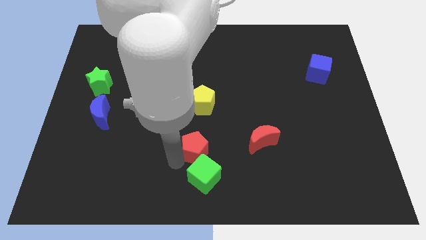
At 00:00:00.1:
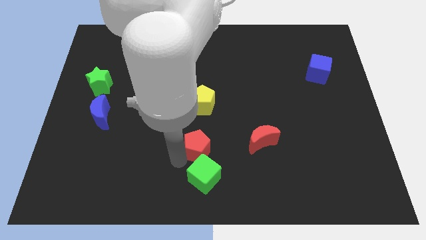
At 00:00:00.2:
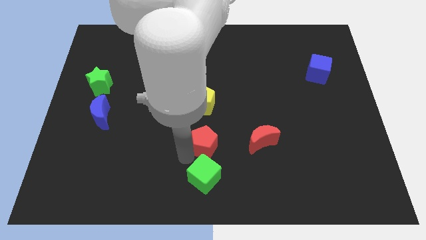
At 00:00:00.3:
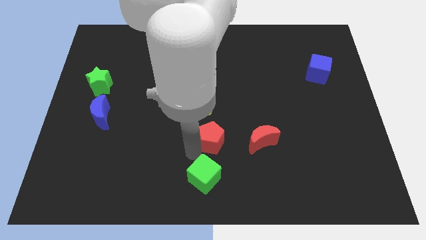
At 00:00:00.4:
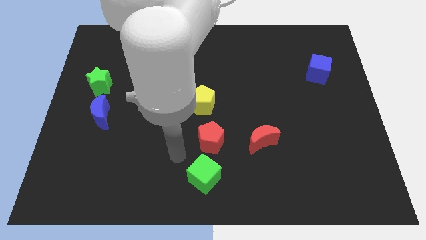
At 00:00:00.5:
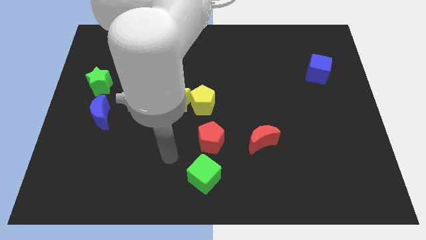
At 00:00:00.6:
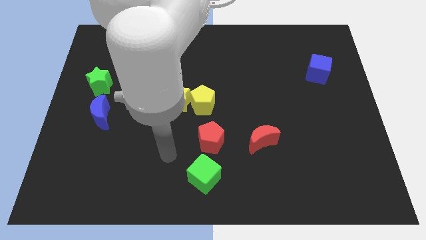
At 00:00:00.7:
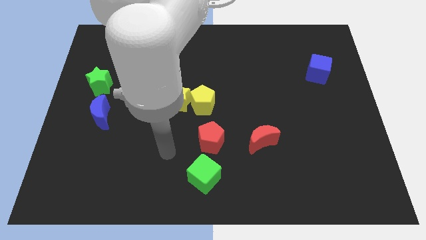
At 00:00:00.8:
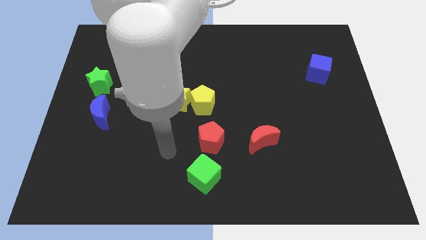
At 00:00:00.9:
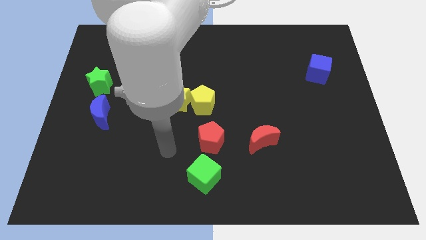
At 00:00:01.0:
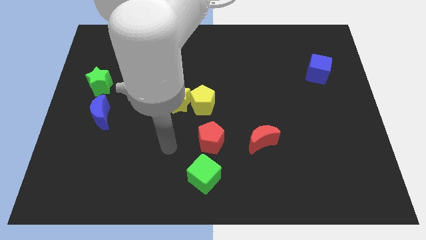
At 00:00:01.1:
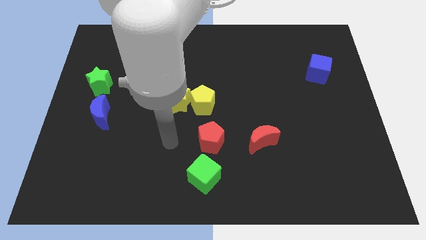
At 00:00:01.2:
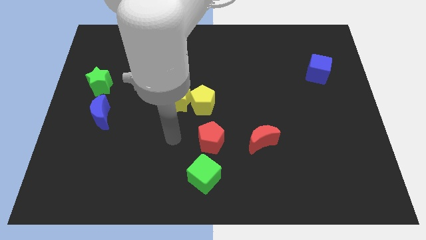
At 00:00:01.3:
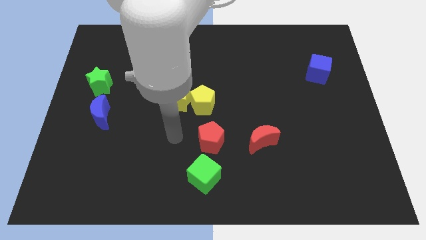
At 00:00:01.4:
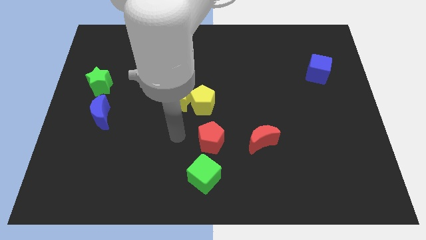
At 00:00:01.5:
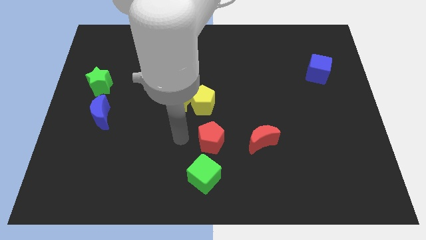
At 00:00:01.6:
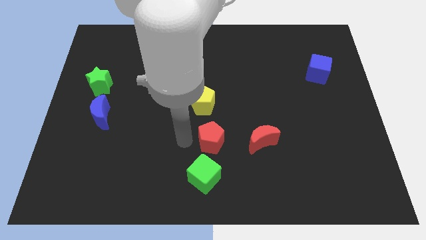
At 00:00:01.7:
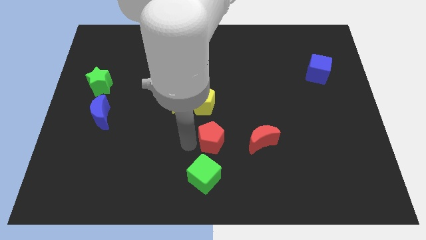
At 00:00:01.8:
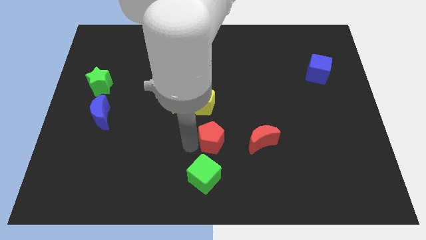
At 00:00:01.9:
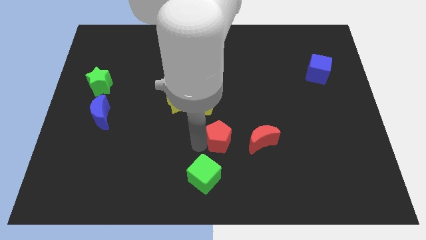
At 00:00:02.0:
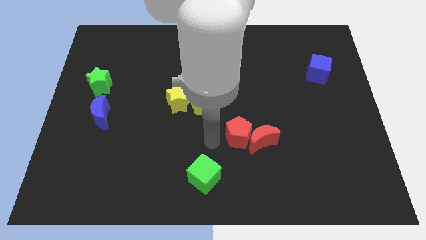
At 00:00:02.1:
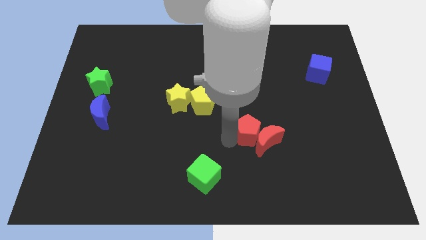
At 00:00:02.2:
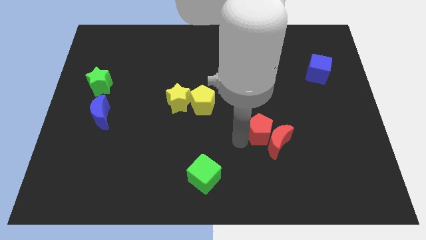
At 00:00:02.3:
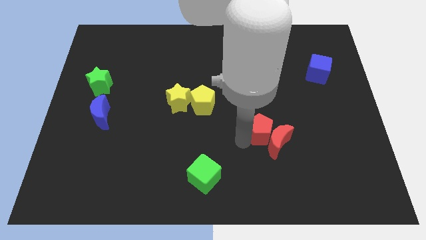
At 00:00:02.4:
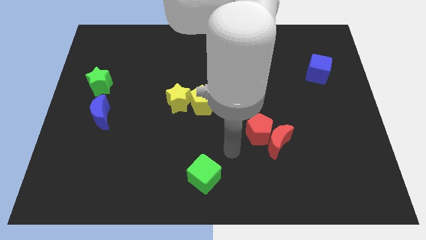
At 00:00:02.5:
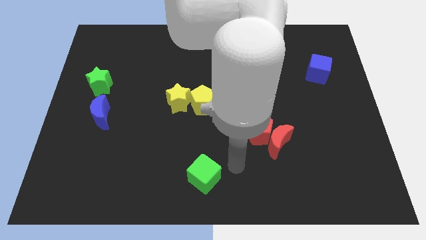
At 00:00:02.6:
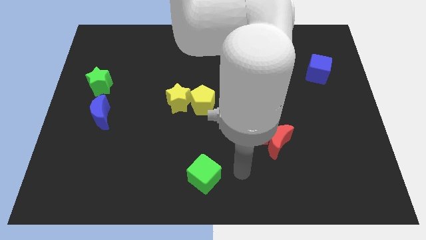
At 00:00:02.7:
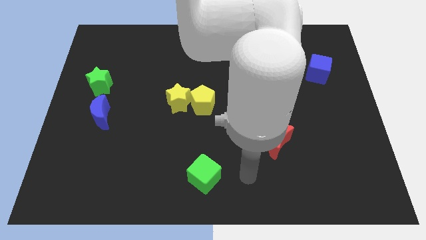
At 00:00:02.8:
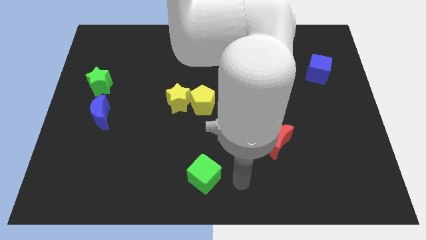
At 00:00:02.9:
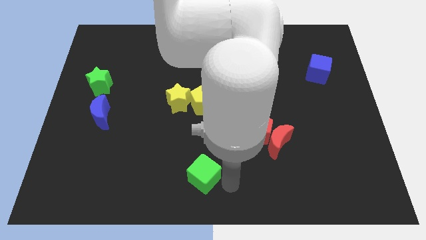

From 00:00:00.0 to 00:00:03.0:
put the red pentagon at the left side of the red crescent

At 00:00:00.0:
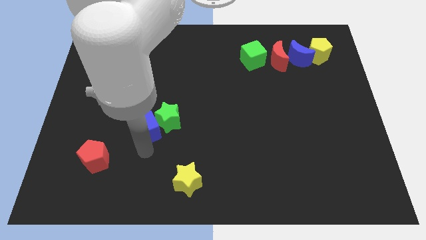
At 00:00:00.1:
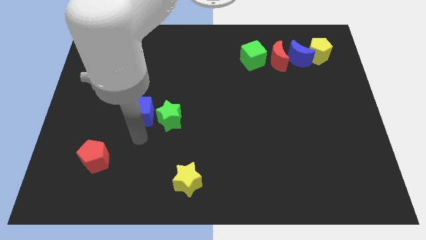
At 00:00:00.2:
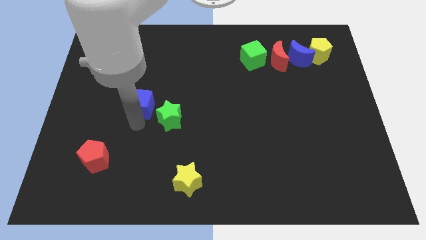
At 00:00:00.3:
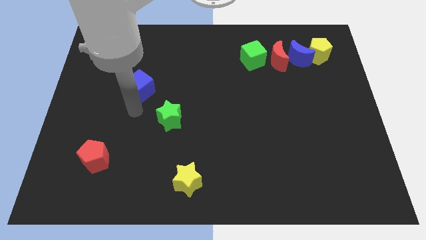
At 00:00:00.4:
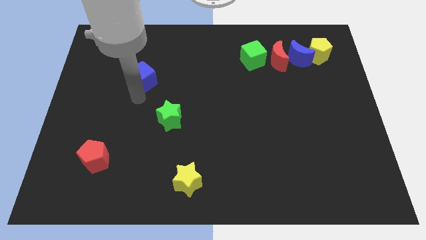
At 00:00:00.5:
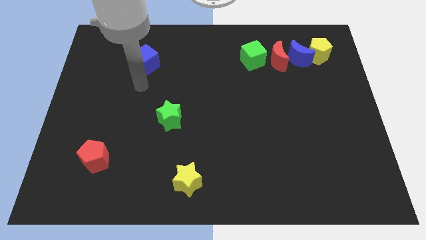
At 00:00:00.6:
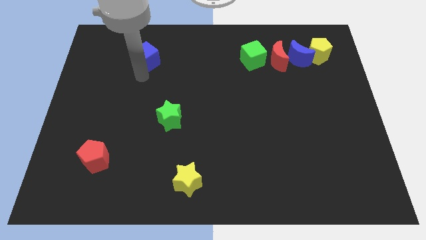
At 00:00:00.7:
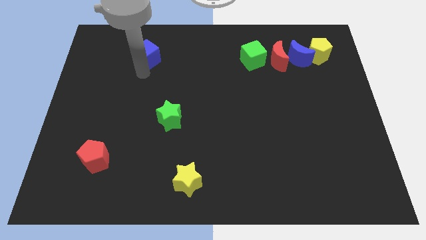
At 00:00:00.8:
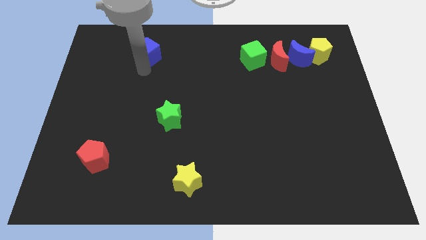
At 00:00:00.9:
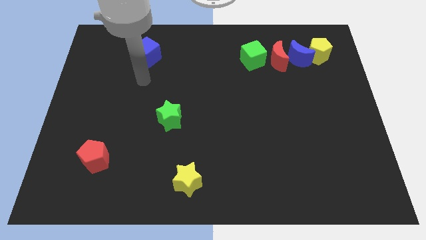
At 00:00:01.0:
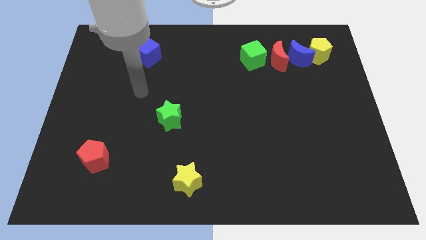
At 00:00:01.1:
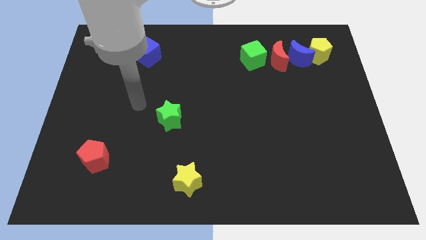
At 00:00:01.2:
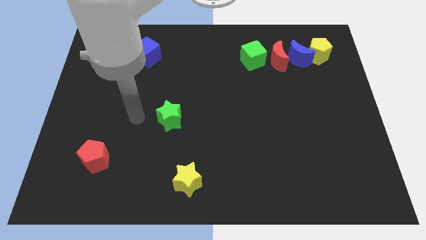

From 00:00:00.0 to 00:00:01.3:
put the blue cube diagonally top left to the green star

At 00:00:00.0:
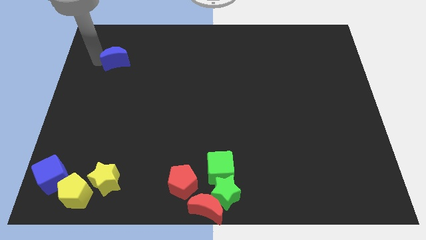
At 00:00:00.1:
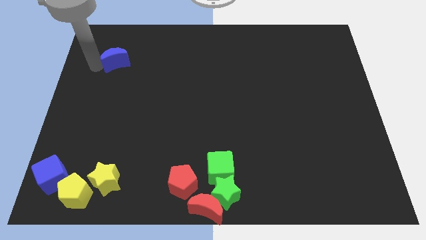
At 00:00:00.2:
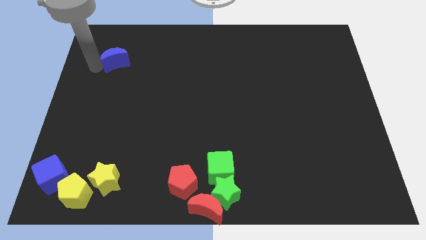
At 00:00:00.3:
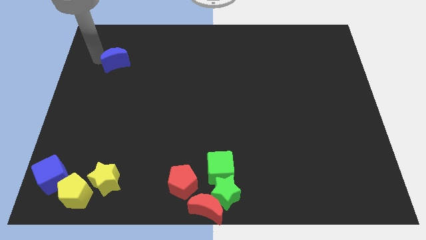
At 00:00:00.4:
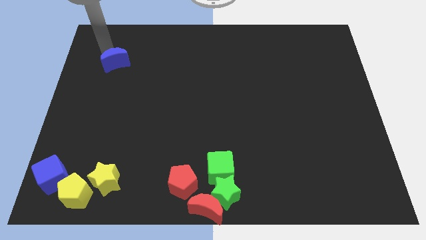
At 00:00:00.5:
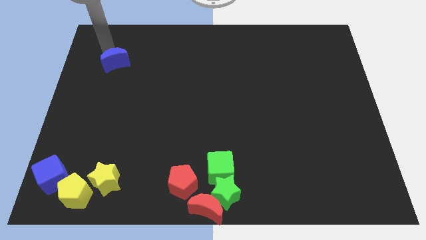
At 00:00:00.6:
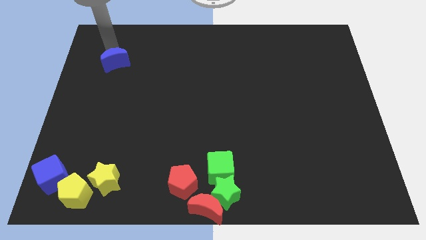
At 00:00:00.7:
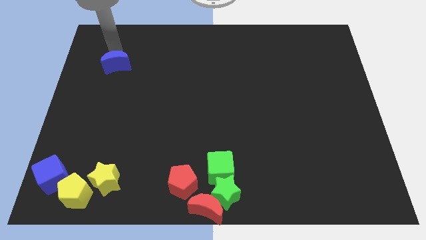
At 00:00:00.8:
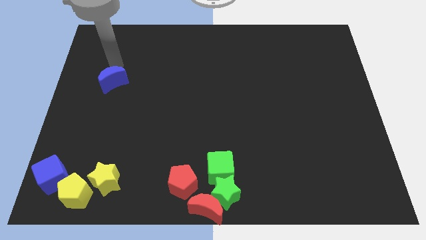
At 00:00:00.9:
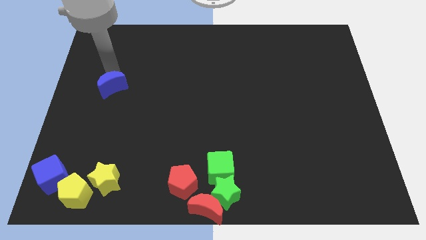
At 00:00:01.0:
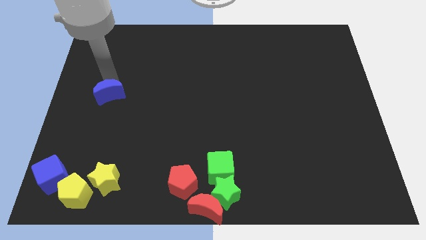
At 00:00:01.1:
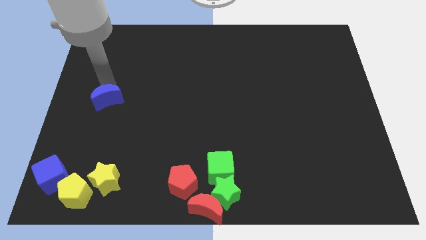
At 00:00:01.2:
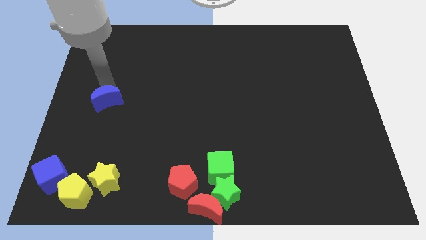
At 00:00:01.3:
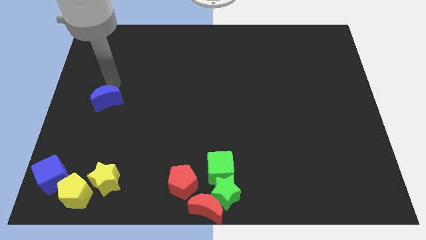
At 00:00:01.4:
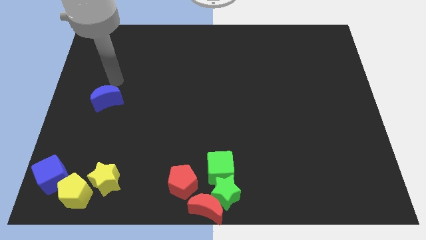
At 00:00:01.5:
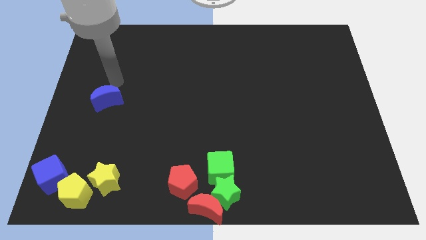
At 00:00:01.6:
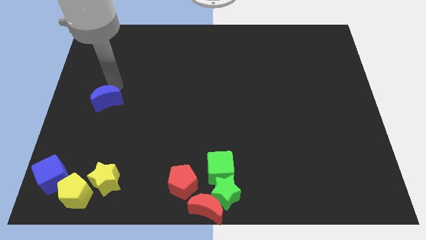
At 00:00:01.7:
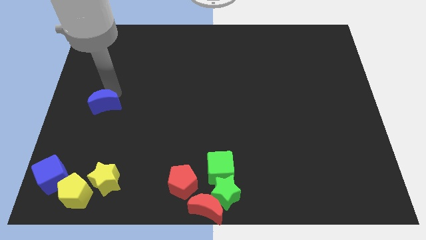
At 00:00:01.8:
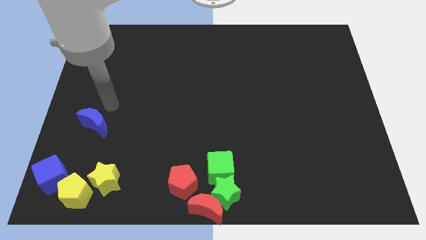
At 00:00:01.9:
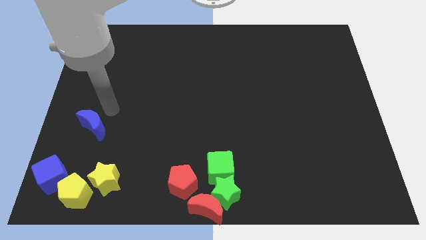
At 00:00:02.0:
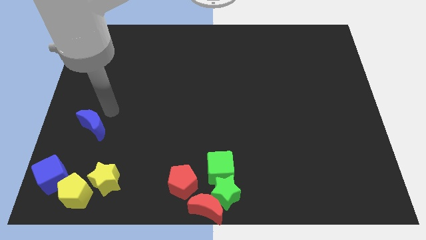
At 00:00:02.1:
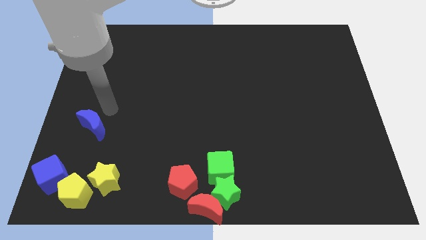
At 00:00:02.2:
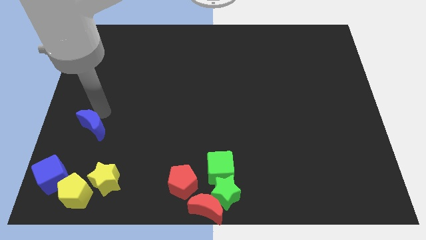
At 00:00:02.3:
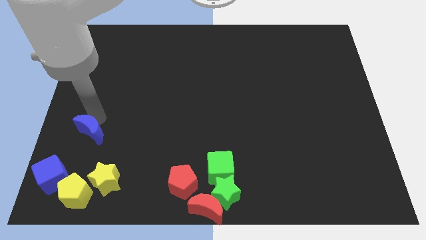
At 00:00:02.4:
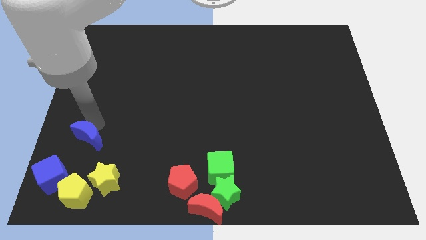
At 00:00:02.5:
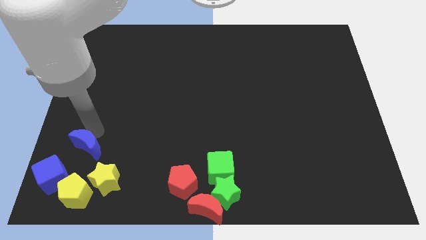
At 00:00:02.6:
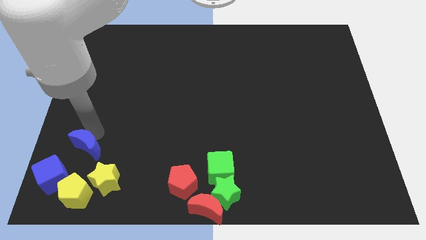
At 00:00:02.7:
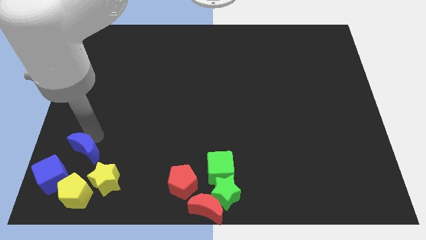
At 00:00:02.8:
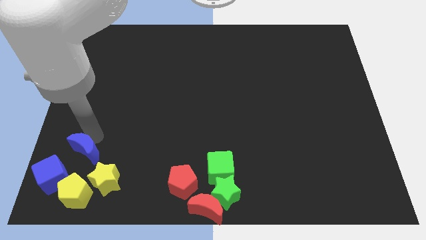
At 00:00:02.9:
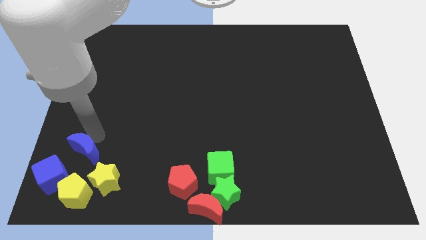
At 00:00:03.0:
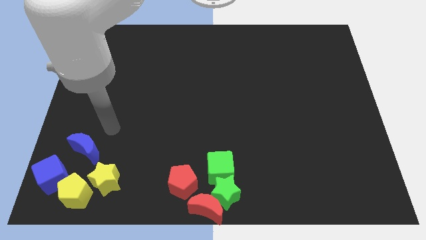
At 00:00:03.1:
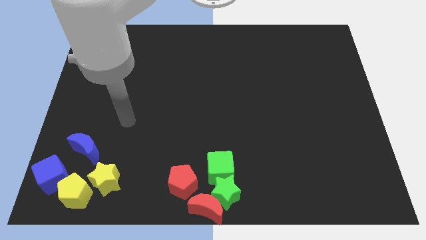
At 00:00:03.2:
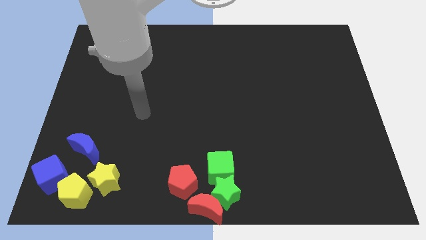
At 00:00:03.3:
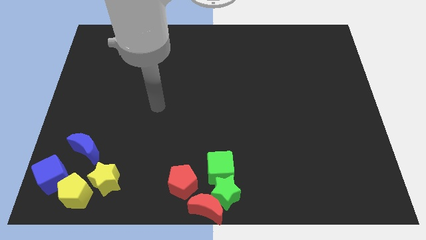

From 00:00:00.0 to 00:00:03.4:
move blue moon into the group of blocks at the bottom left

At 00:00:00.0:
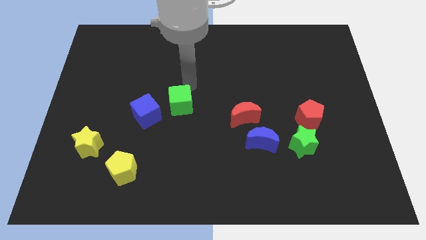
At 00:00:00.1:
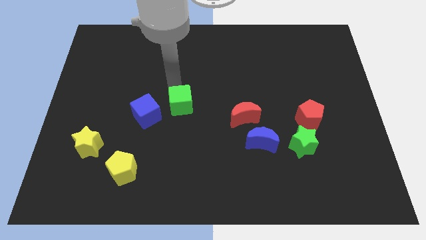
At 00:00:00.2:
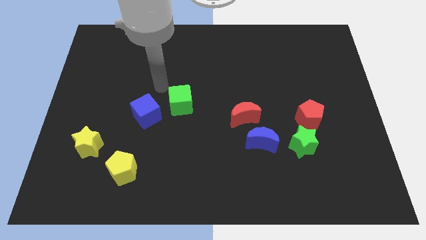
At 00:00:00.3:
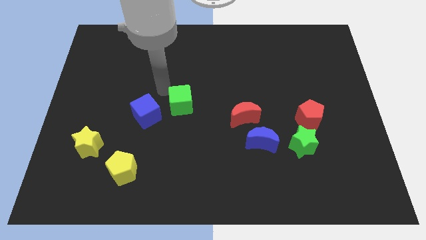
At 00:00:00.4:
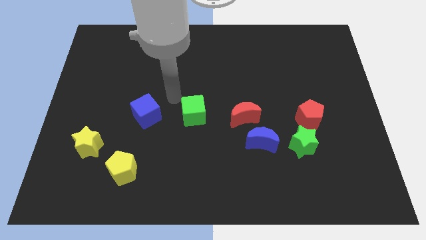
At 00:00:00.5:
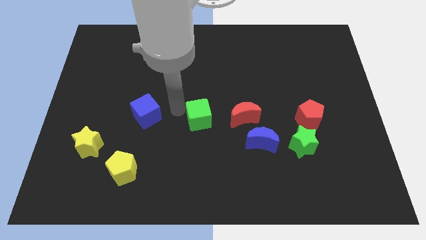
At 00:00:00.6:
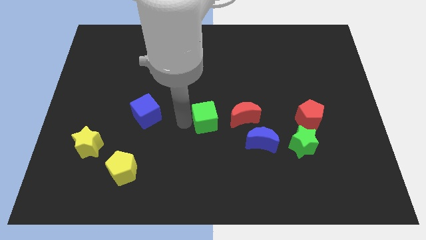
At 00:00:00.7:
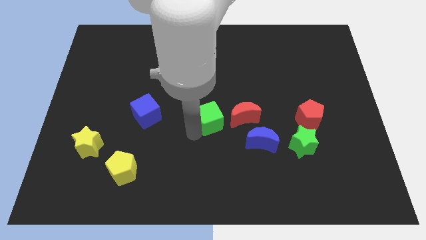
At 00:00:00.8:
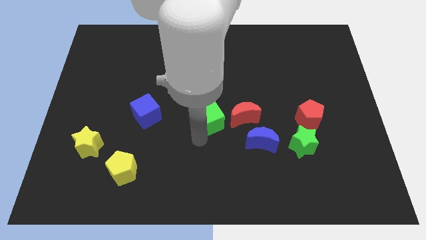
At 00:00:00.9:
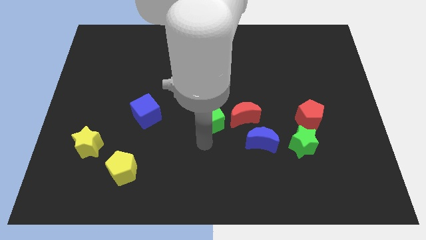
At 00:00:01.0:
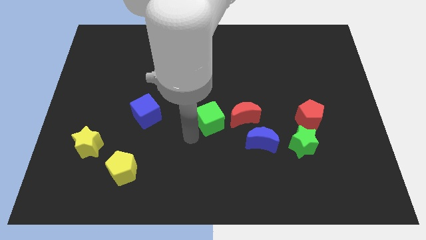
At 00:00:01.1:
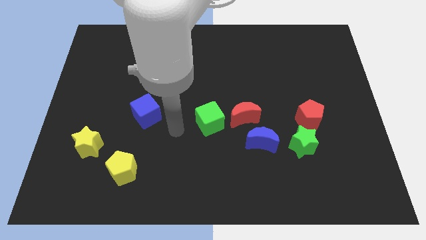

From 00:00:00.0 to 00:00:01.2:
move the green cube close to the red moon
